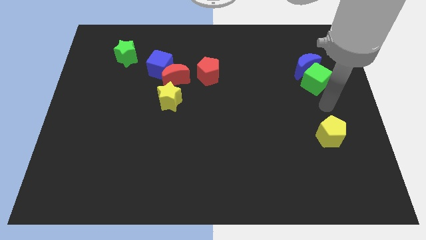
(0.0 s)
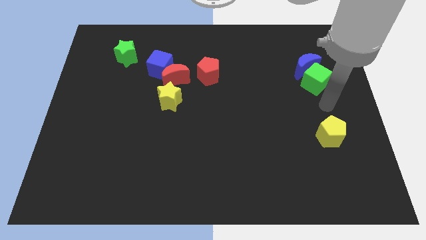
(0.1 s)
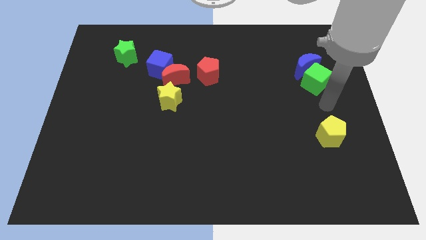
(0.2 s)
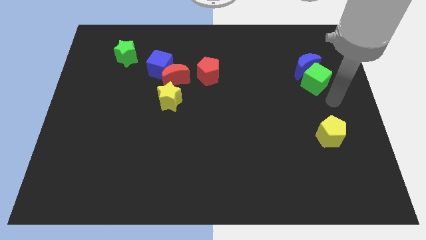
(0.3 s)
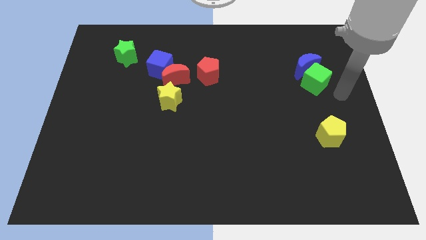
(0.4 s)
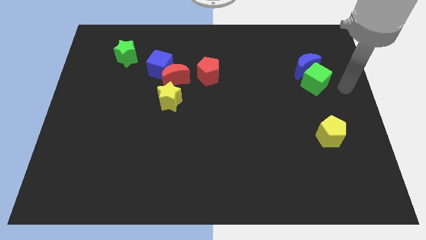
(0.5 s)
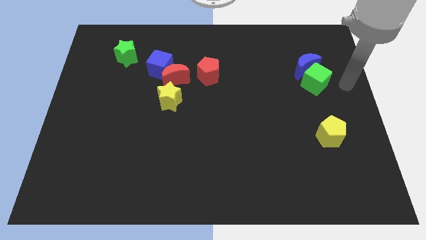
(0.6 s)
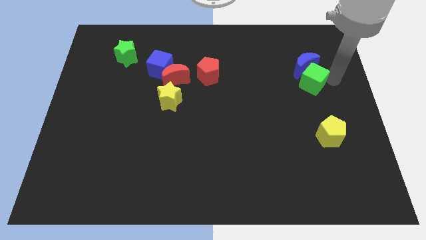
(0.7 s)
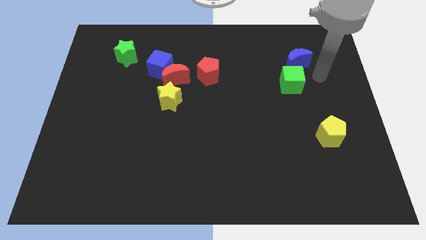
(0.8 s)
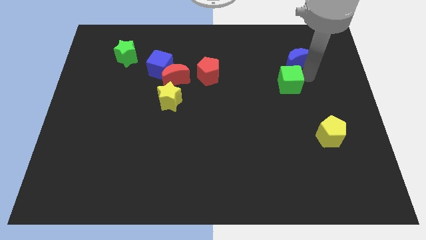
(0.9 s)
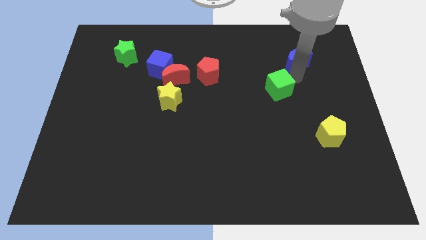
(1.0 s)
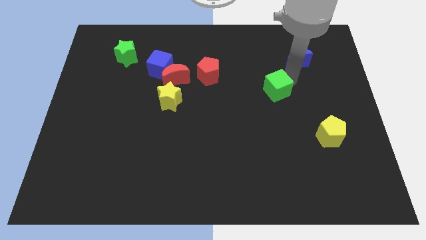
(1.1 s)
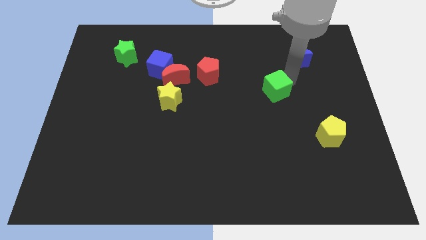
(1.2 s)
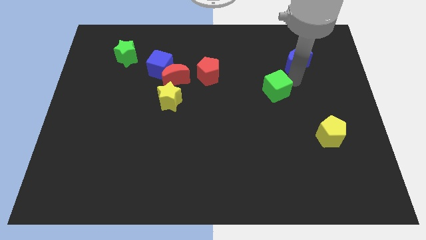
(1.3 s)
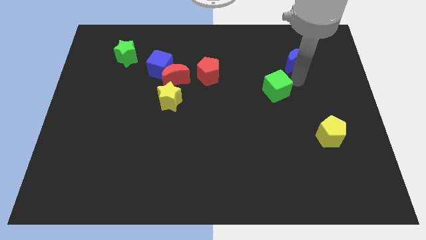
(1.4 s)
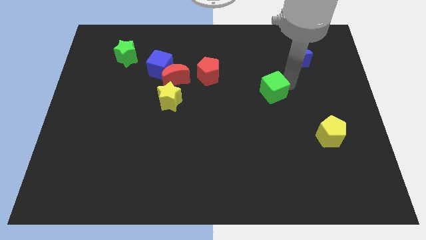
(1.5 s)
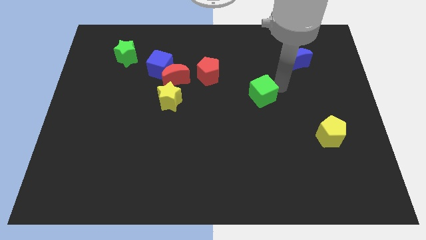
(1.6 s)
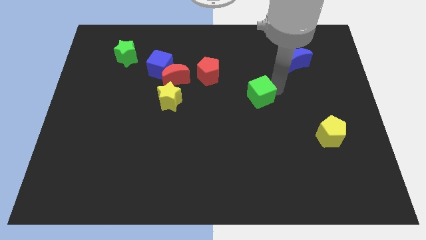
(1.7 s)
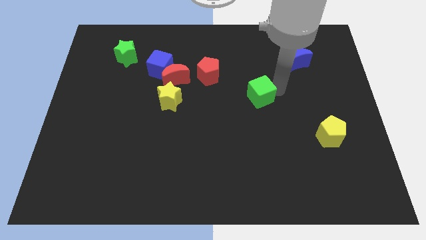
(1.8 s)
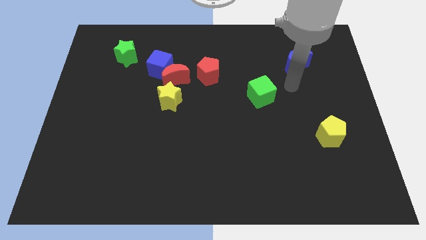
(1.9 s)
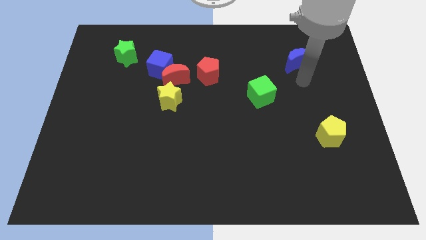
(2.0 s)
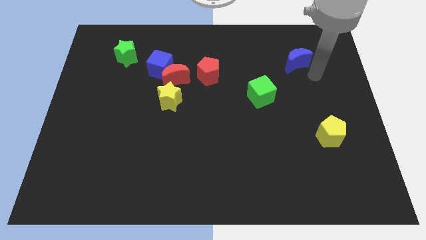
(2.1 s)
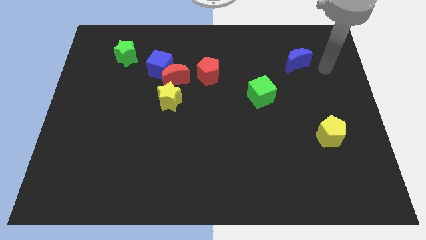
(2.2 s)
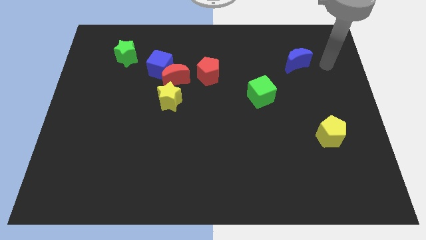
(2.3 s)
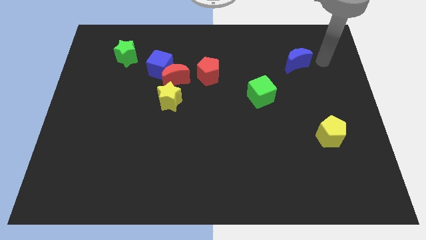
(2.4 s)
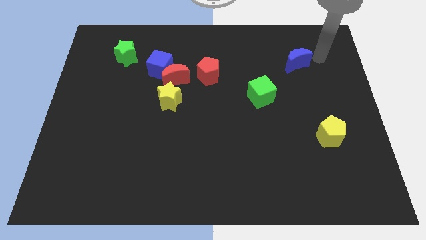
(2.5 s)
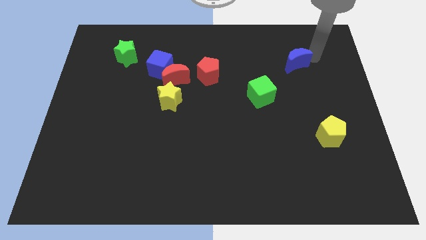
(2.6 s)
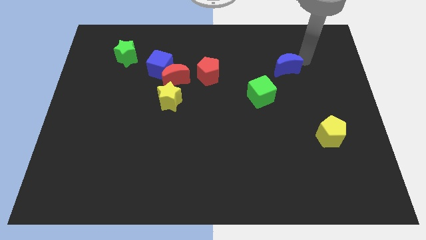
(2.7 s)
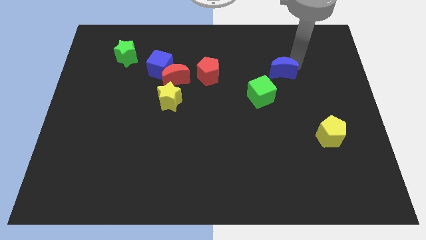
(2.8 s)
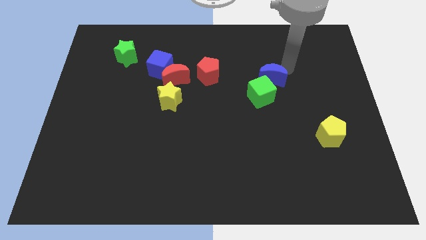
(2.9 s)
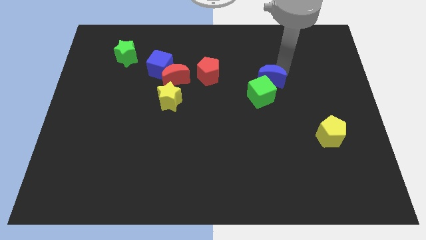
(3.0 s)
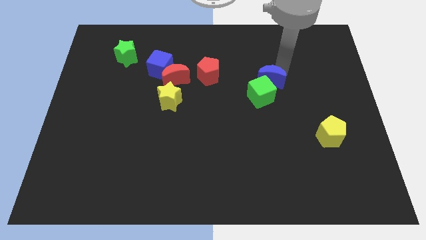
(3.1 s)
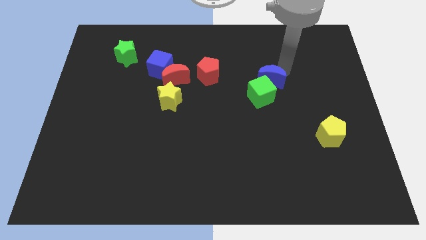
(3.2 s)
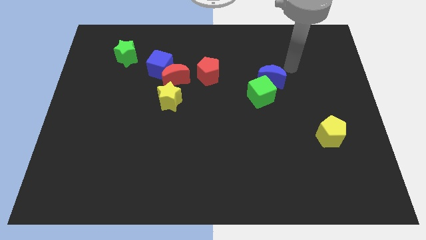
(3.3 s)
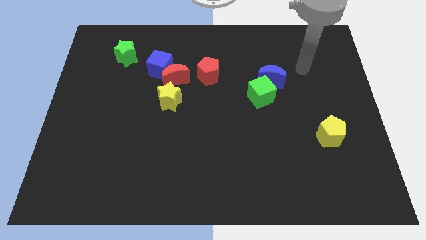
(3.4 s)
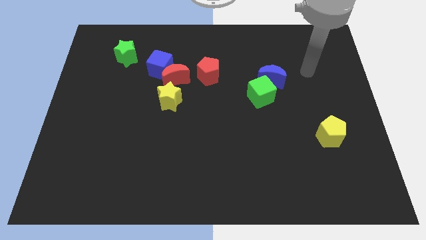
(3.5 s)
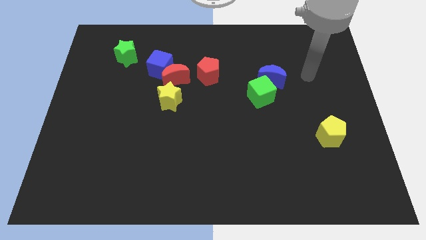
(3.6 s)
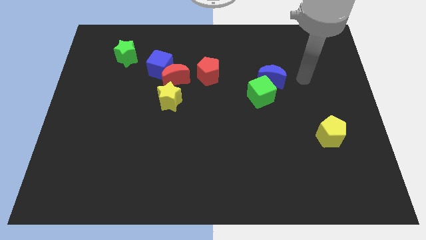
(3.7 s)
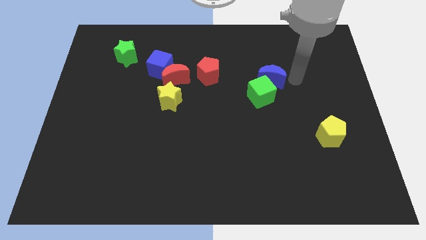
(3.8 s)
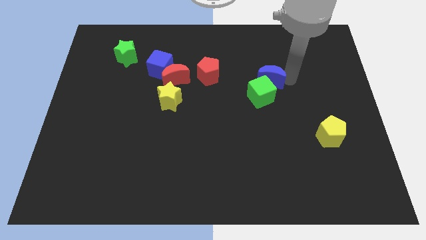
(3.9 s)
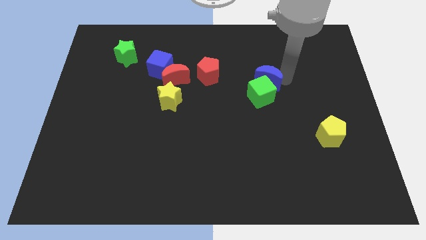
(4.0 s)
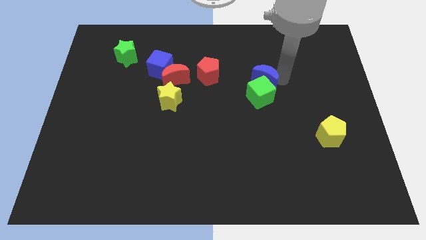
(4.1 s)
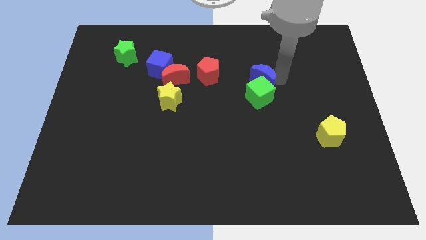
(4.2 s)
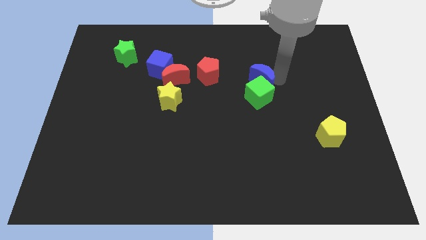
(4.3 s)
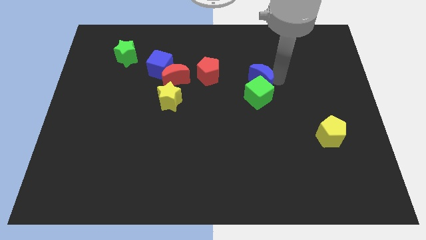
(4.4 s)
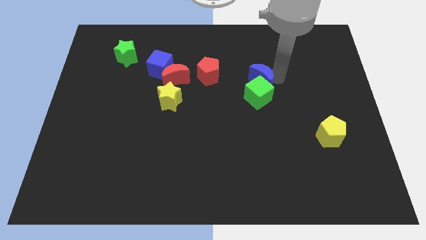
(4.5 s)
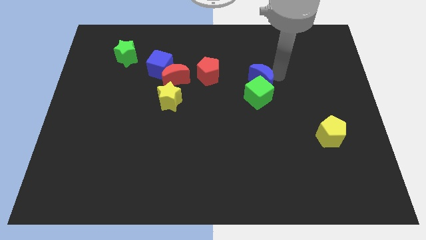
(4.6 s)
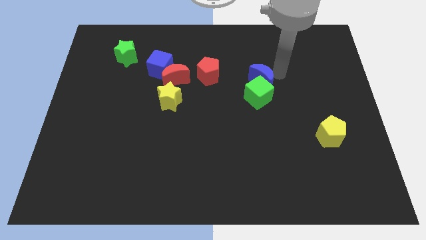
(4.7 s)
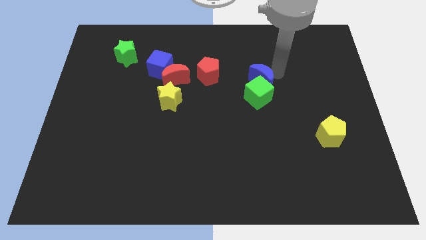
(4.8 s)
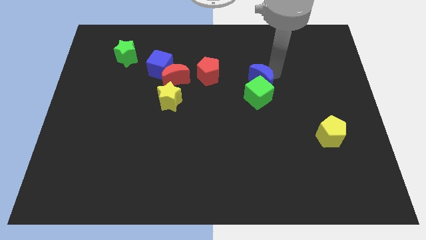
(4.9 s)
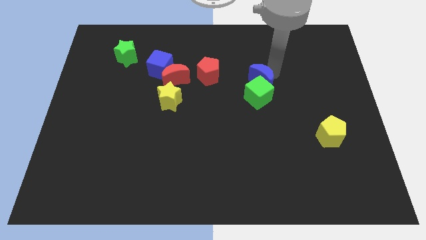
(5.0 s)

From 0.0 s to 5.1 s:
put the green cube and blue crescent in between the red pentagon and yellow pentagon

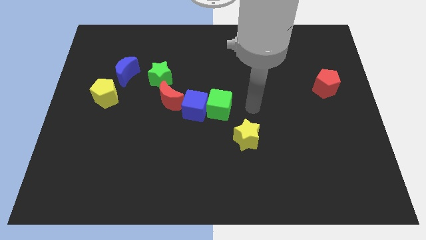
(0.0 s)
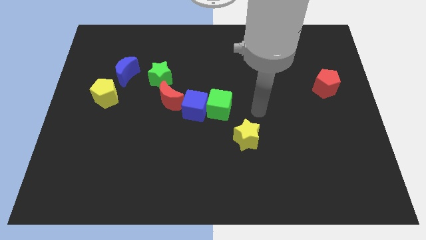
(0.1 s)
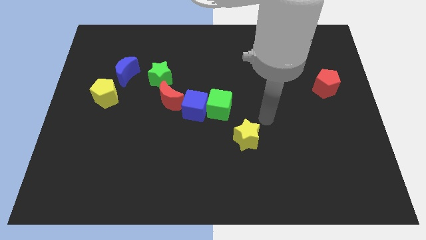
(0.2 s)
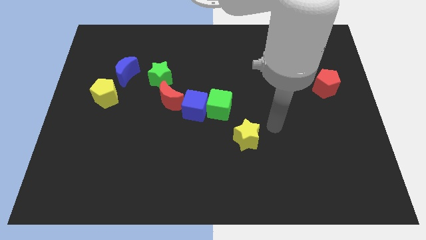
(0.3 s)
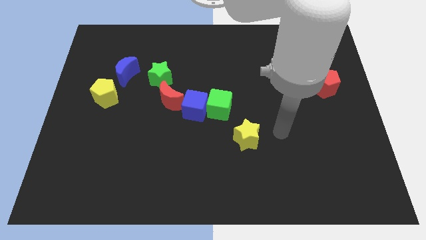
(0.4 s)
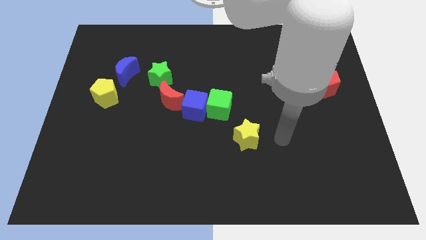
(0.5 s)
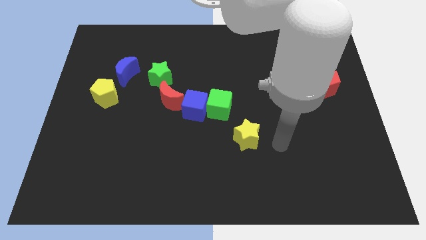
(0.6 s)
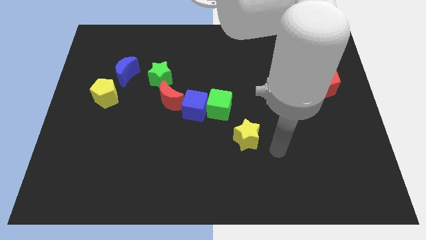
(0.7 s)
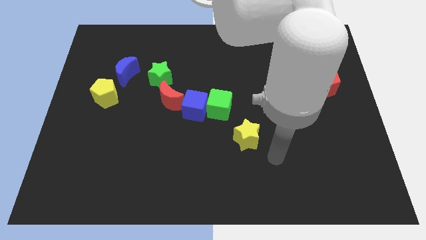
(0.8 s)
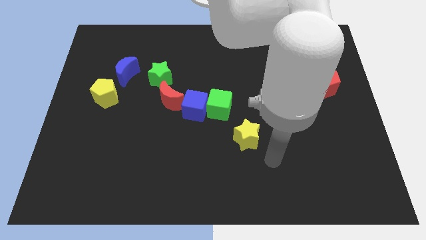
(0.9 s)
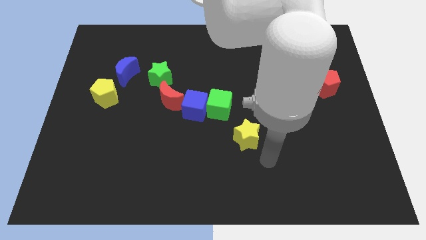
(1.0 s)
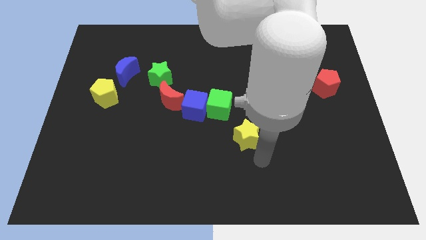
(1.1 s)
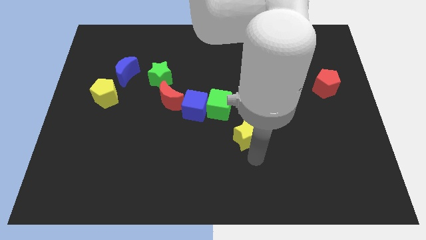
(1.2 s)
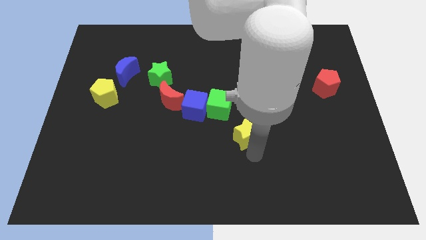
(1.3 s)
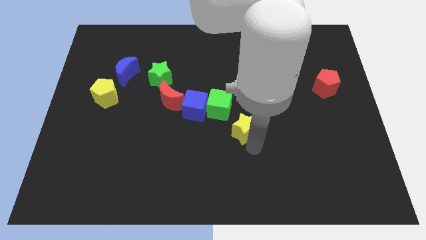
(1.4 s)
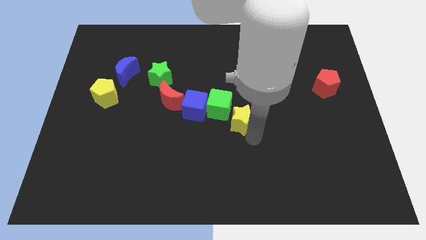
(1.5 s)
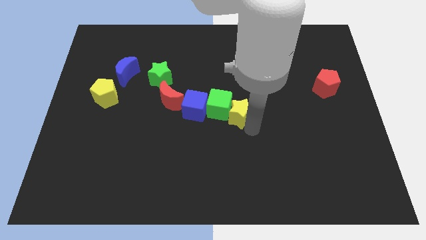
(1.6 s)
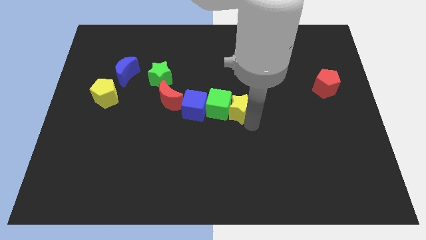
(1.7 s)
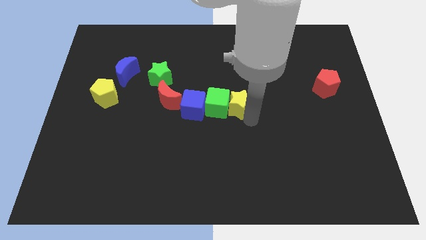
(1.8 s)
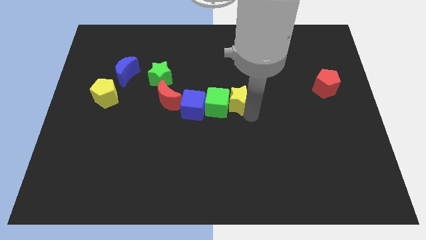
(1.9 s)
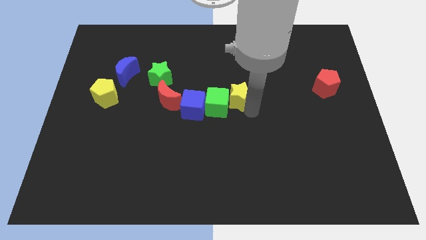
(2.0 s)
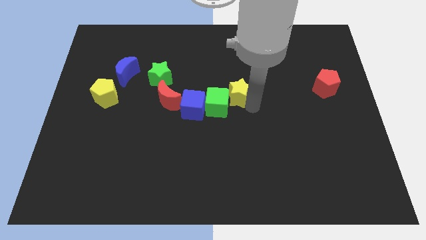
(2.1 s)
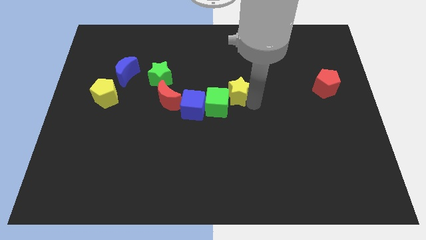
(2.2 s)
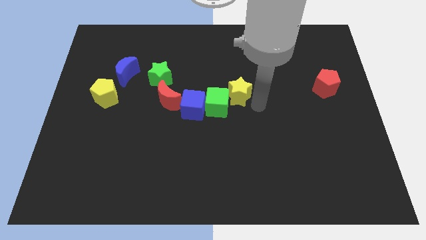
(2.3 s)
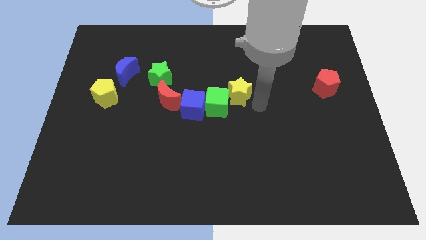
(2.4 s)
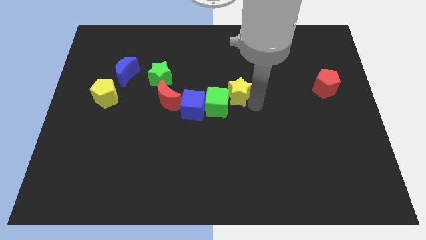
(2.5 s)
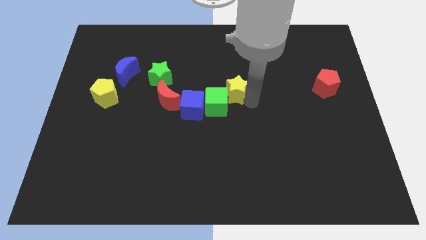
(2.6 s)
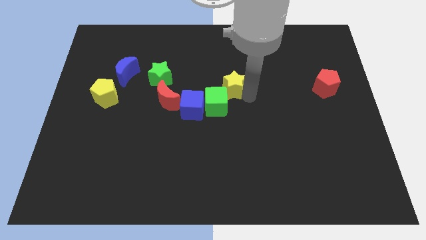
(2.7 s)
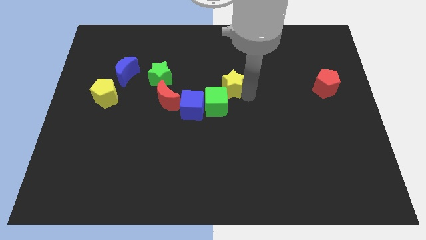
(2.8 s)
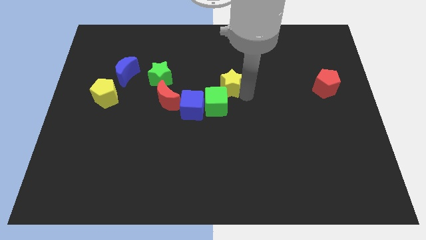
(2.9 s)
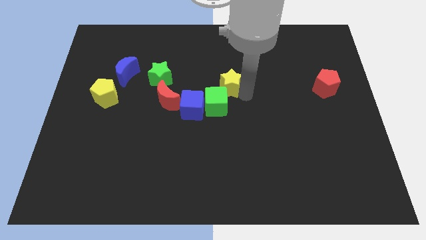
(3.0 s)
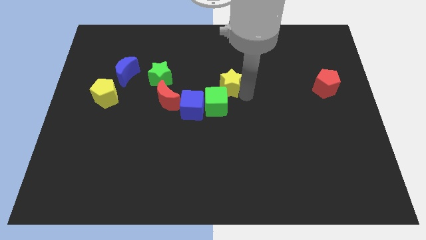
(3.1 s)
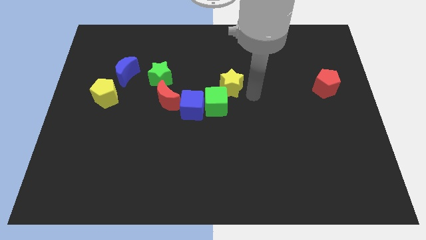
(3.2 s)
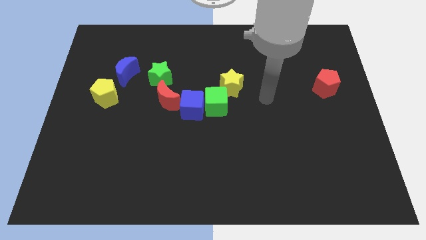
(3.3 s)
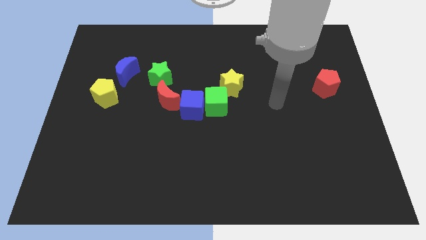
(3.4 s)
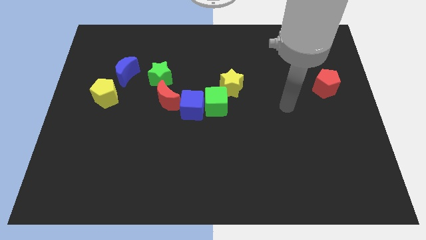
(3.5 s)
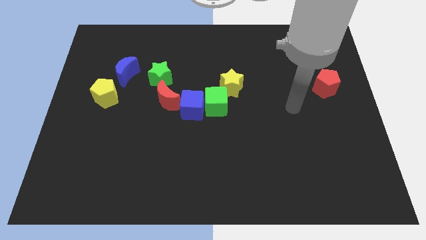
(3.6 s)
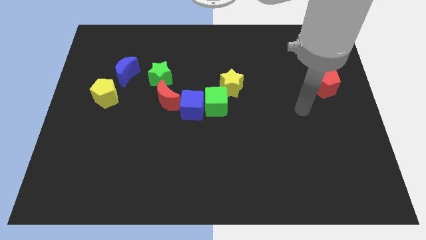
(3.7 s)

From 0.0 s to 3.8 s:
place the yellow star towards the top right side of the green cube

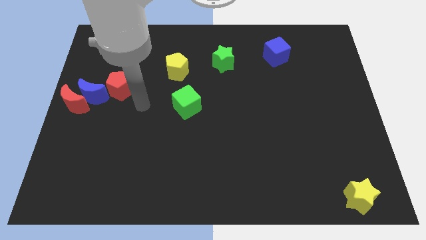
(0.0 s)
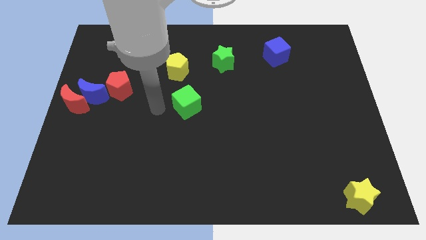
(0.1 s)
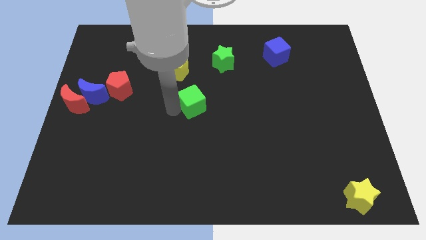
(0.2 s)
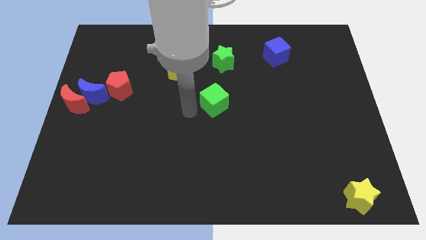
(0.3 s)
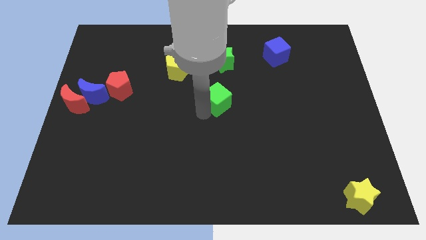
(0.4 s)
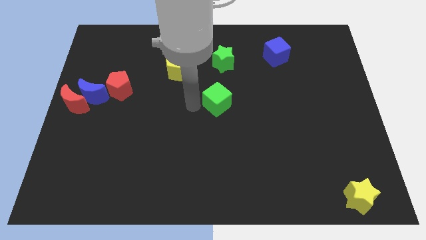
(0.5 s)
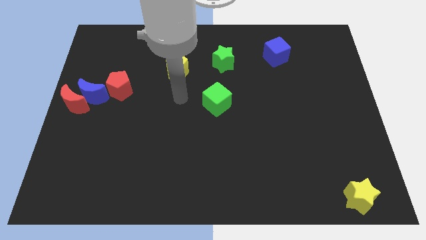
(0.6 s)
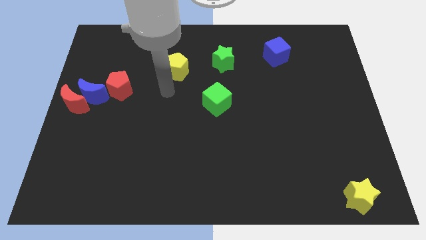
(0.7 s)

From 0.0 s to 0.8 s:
place the green cube vertically below the green star
